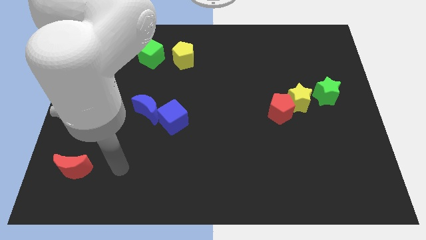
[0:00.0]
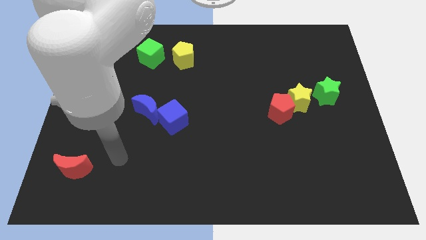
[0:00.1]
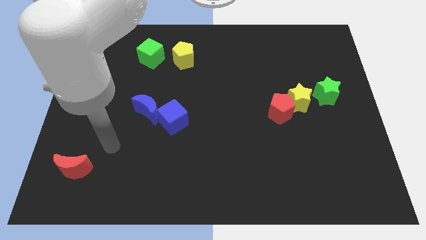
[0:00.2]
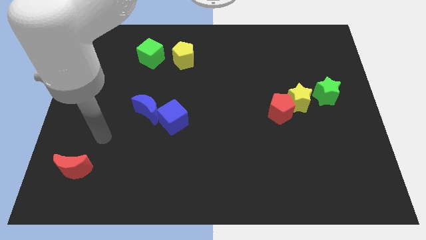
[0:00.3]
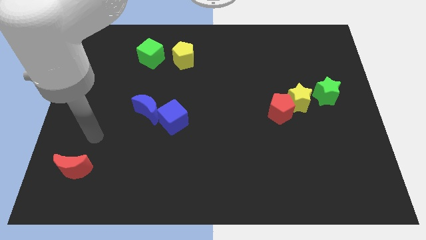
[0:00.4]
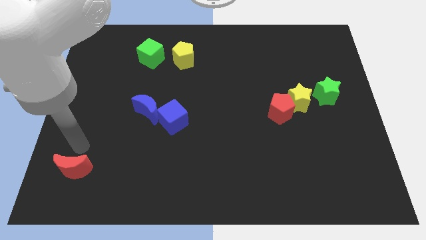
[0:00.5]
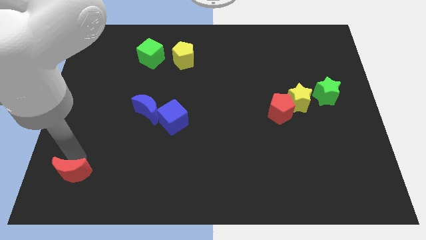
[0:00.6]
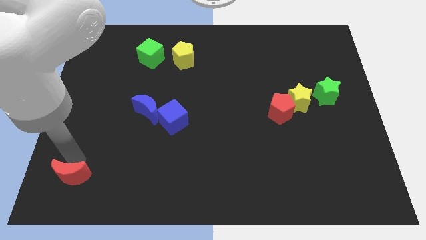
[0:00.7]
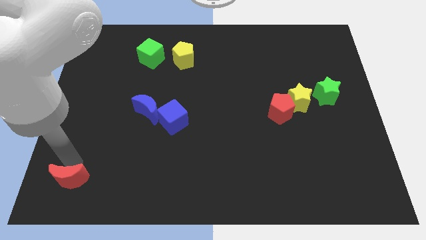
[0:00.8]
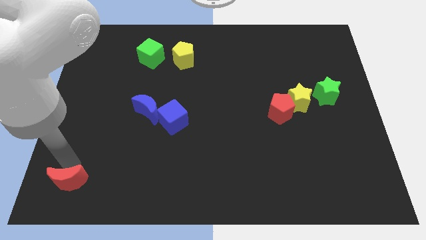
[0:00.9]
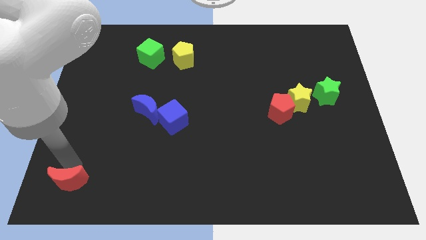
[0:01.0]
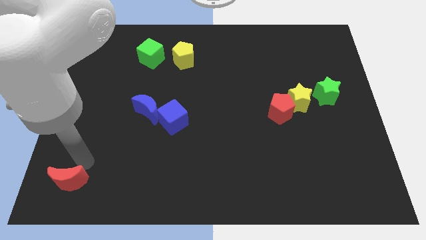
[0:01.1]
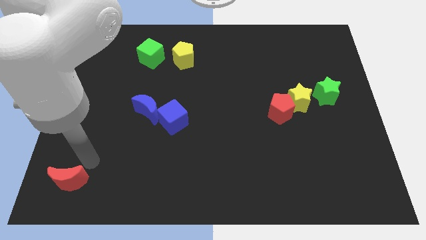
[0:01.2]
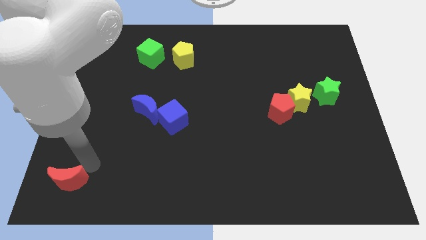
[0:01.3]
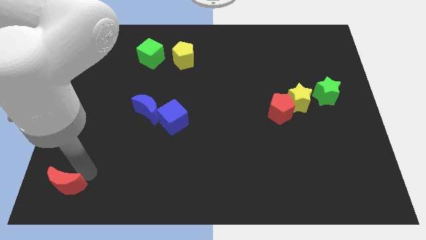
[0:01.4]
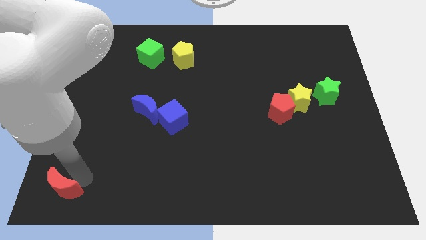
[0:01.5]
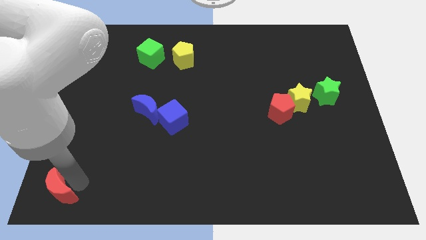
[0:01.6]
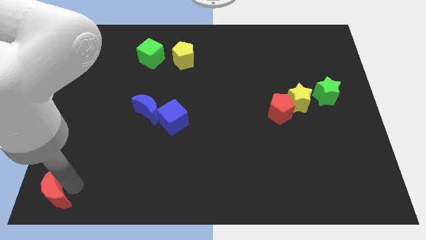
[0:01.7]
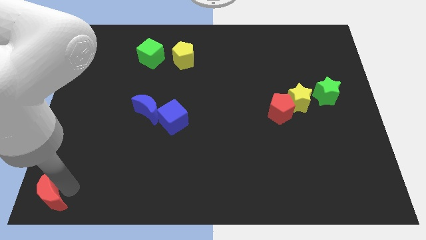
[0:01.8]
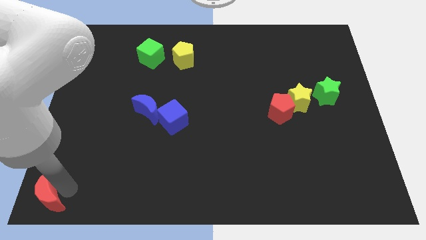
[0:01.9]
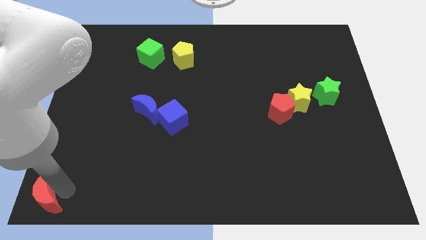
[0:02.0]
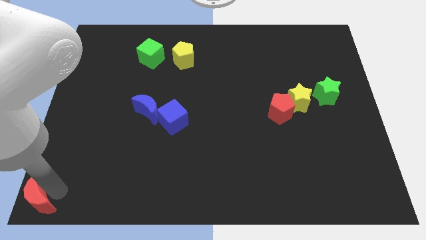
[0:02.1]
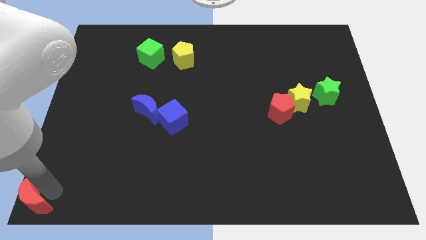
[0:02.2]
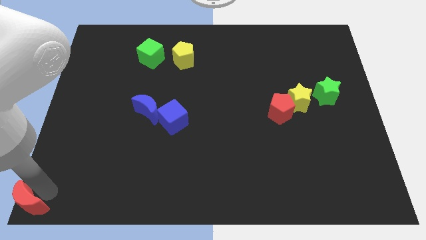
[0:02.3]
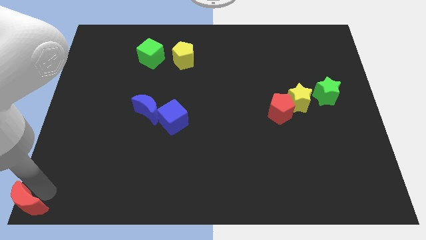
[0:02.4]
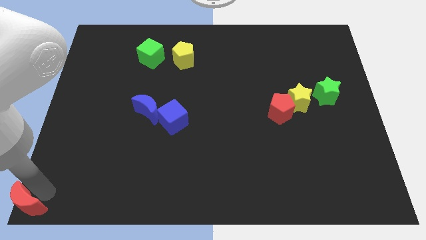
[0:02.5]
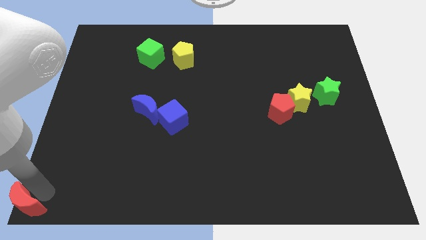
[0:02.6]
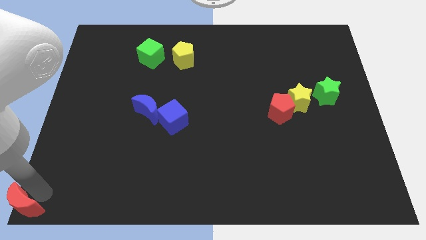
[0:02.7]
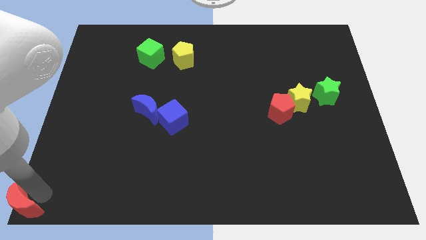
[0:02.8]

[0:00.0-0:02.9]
move the red crescent to the bottom left corner

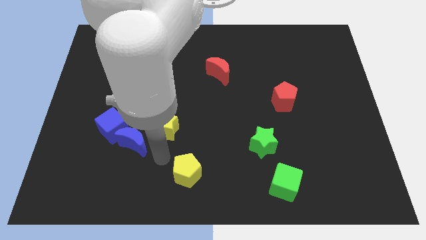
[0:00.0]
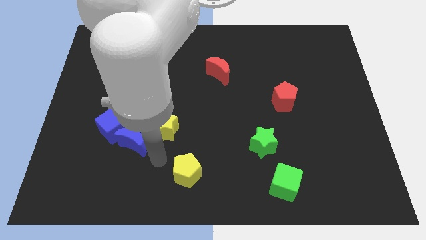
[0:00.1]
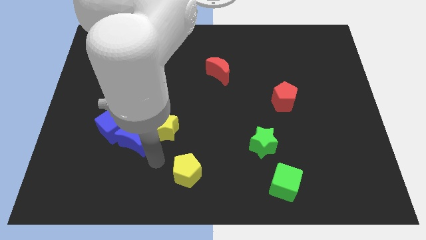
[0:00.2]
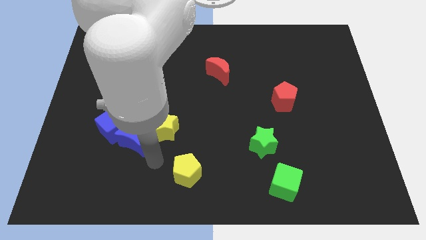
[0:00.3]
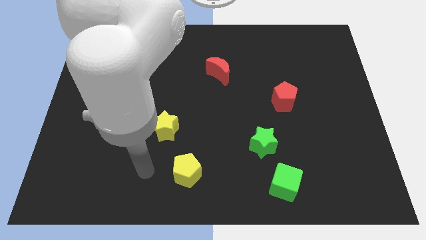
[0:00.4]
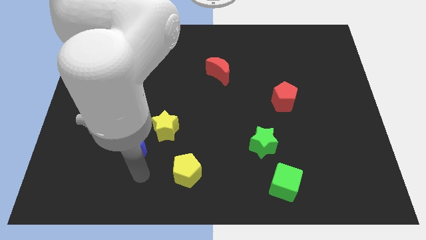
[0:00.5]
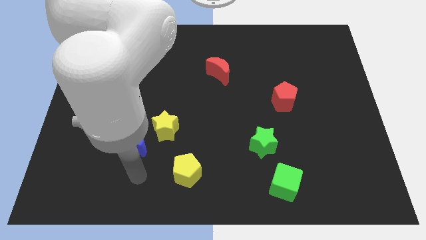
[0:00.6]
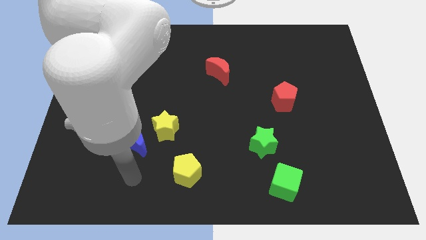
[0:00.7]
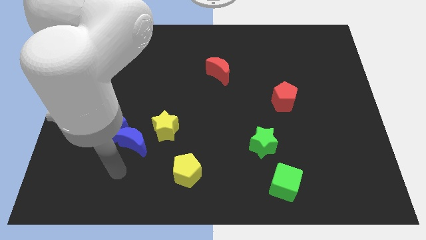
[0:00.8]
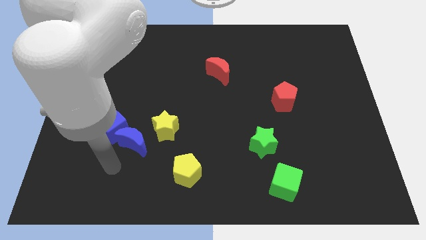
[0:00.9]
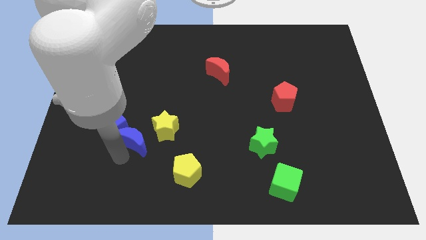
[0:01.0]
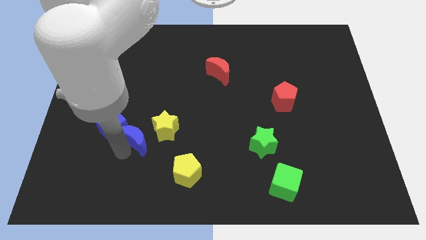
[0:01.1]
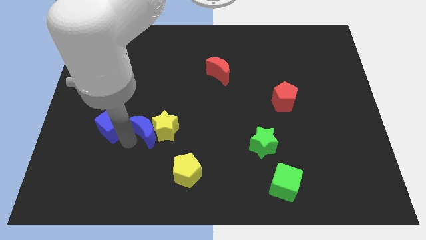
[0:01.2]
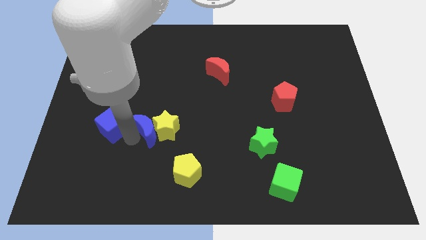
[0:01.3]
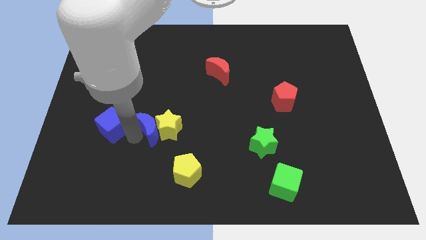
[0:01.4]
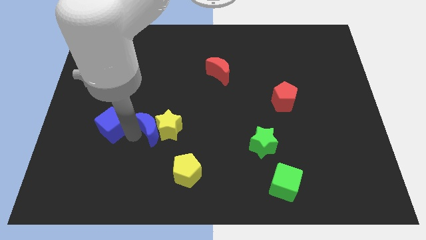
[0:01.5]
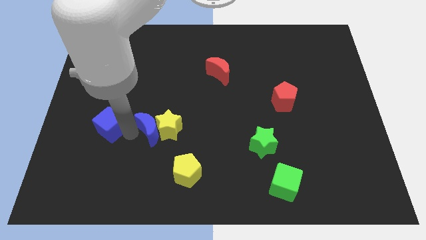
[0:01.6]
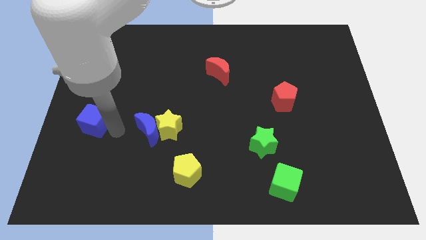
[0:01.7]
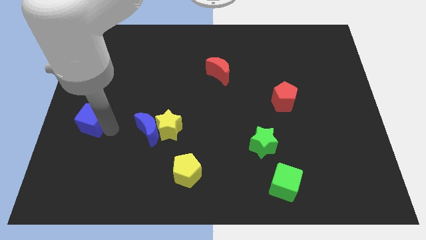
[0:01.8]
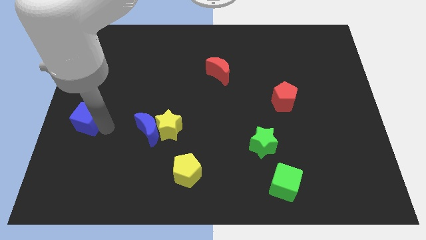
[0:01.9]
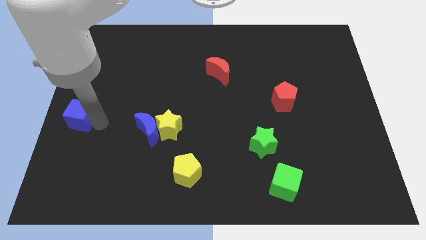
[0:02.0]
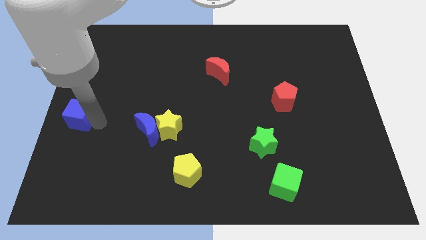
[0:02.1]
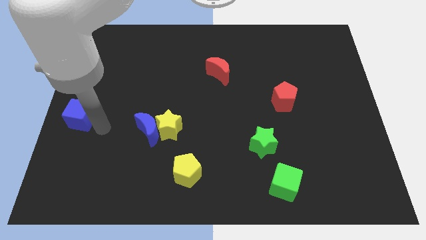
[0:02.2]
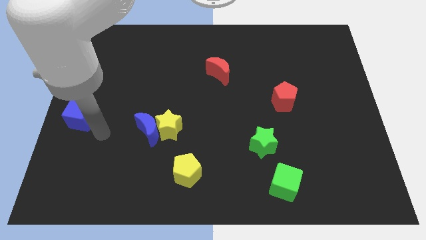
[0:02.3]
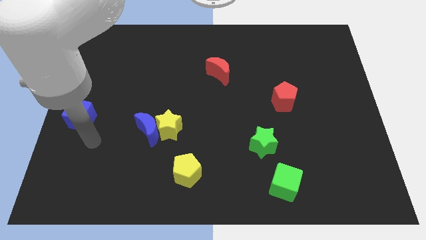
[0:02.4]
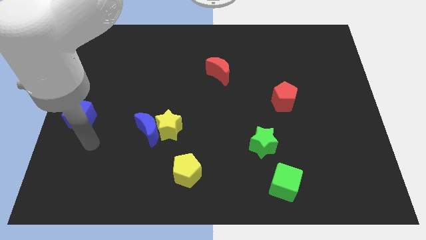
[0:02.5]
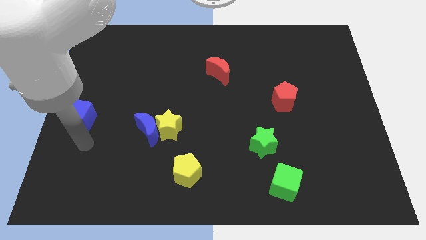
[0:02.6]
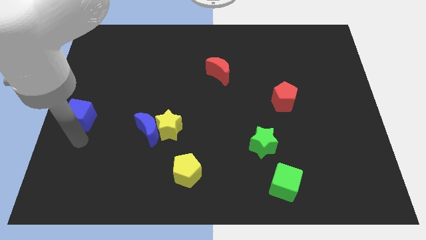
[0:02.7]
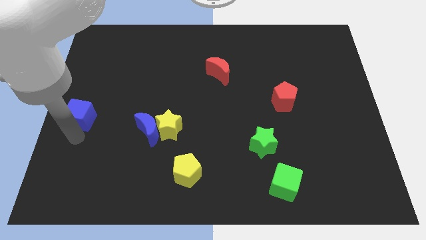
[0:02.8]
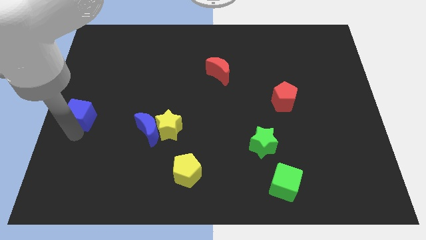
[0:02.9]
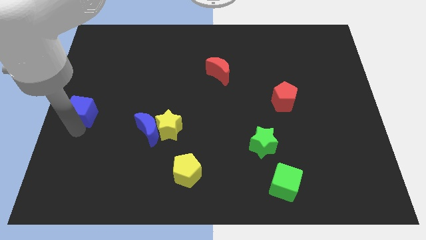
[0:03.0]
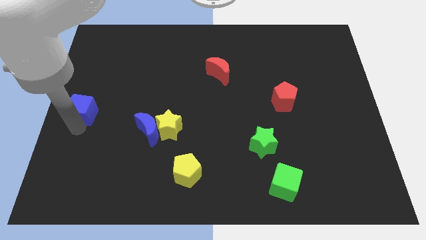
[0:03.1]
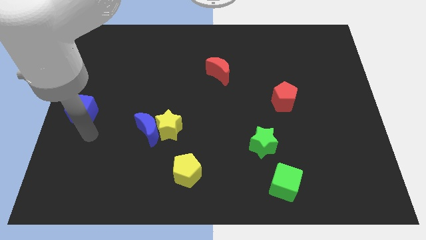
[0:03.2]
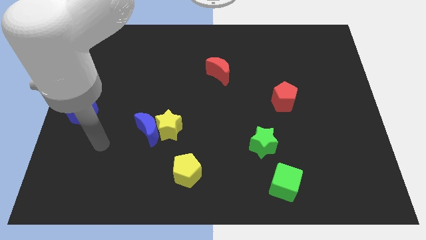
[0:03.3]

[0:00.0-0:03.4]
place the blue cube at the center left of the table

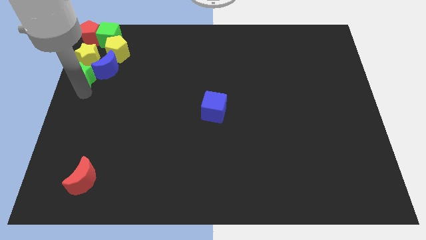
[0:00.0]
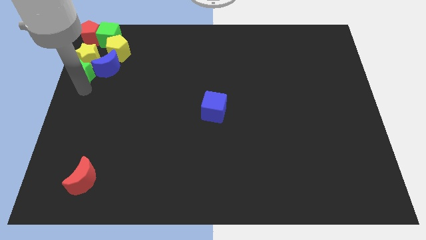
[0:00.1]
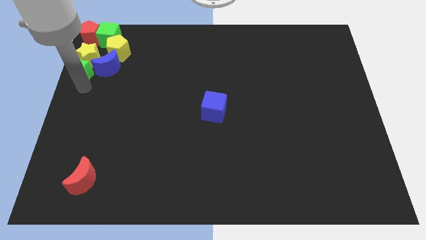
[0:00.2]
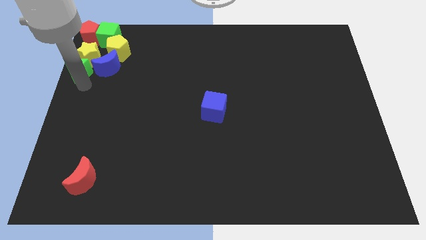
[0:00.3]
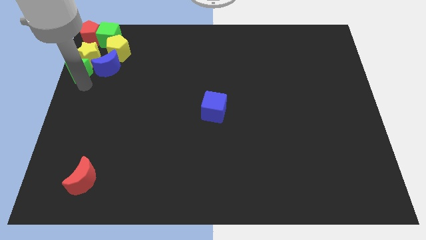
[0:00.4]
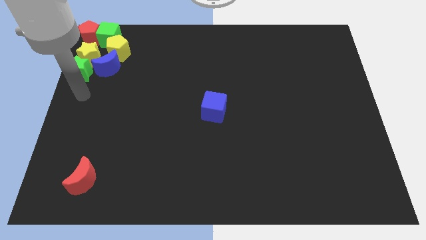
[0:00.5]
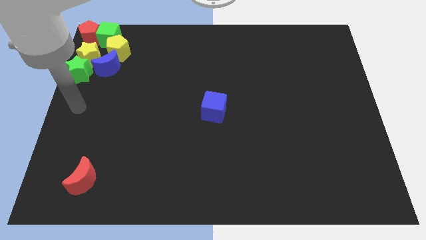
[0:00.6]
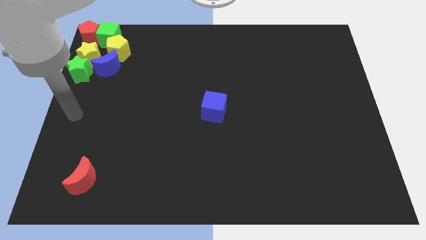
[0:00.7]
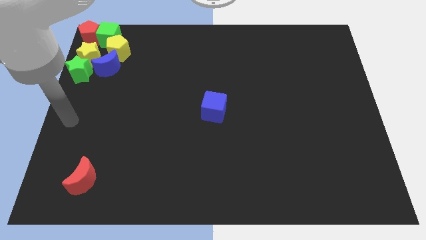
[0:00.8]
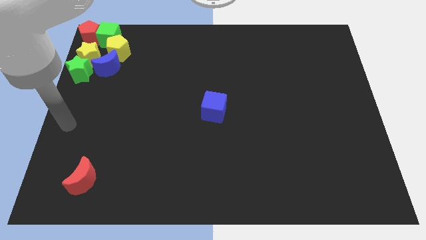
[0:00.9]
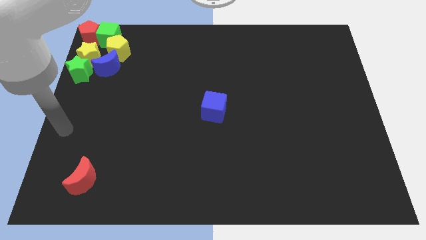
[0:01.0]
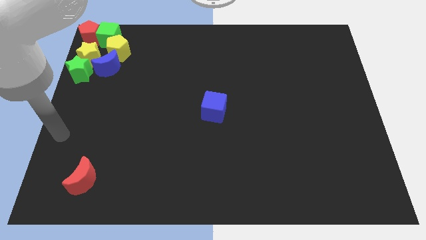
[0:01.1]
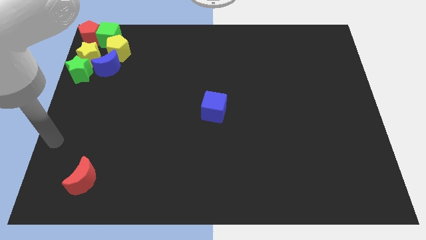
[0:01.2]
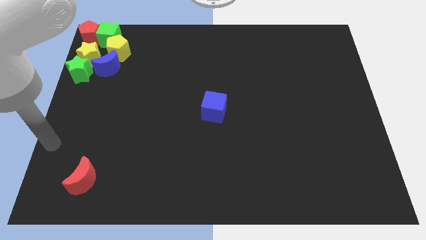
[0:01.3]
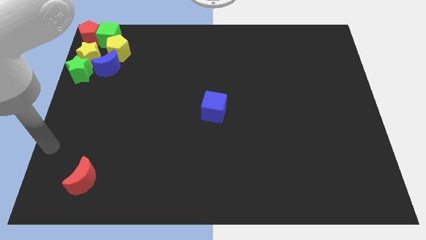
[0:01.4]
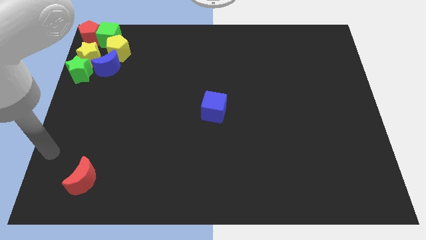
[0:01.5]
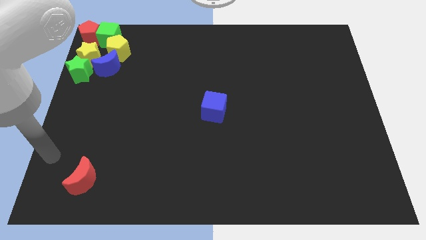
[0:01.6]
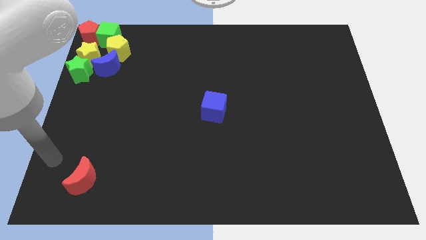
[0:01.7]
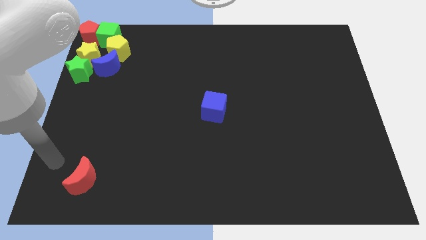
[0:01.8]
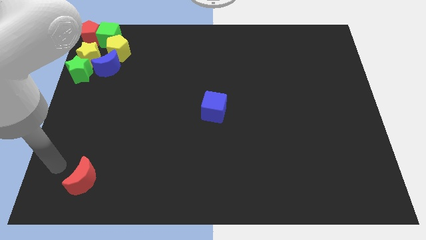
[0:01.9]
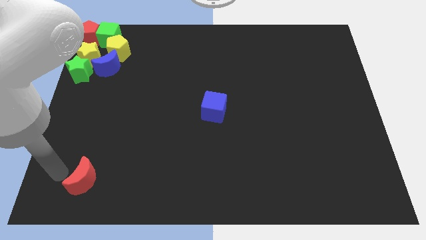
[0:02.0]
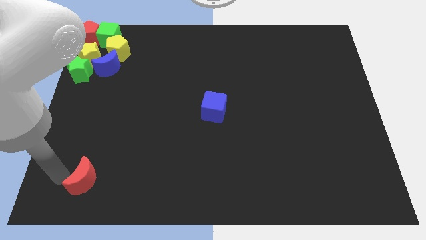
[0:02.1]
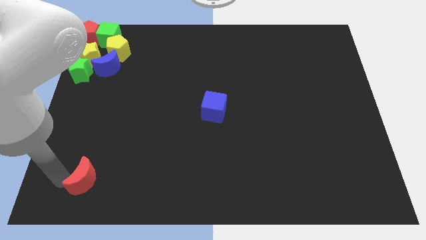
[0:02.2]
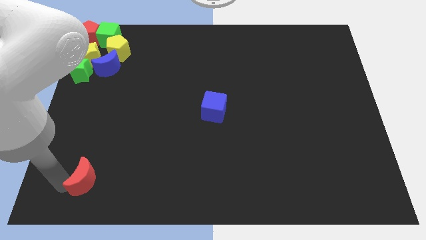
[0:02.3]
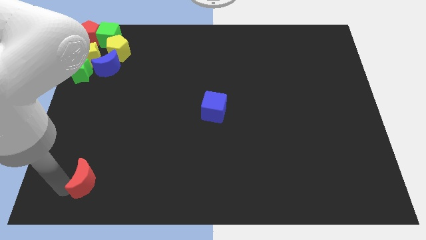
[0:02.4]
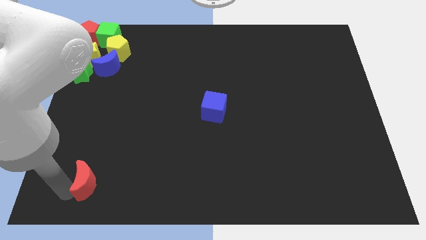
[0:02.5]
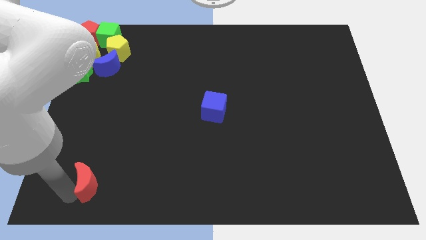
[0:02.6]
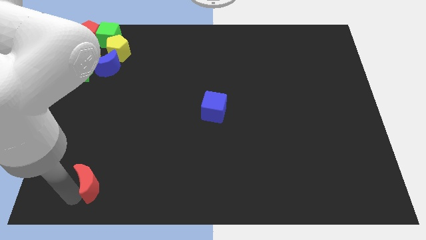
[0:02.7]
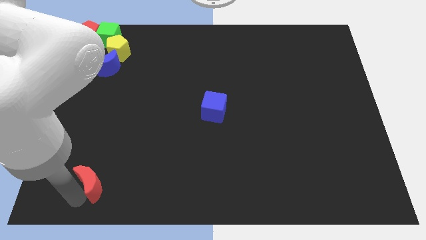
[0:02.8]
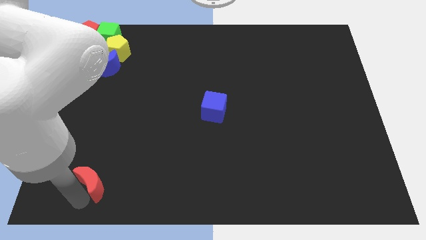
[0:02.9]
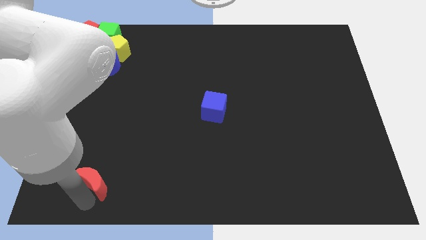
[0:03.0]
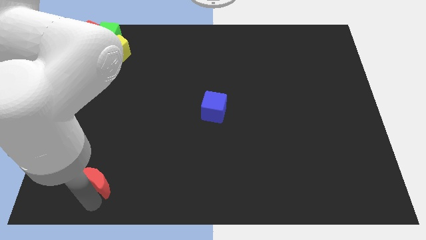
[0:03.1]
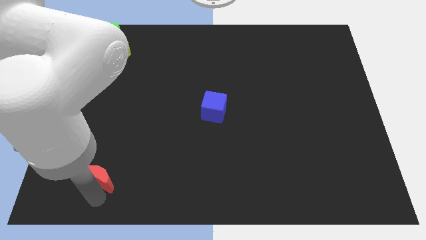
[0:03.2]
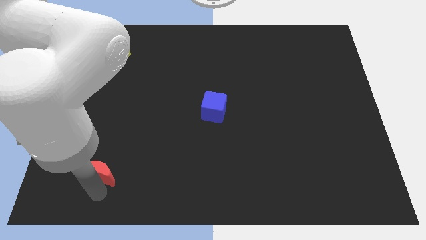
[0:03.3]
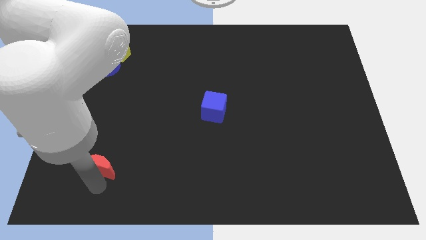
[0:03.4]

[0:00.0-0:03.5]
turn the red moon slightly
